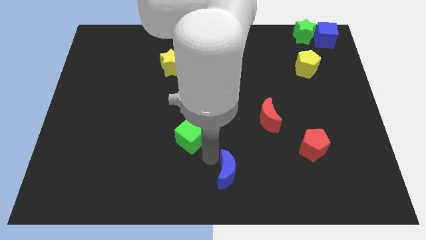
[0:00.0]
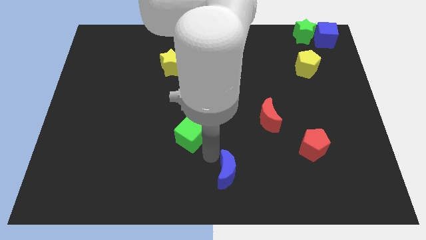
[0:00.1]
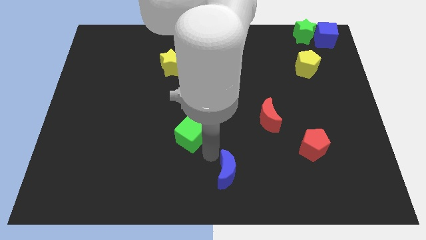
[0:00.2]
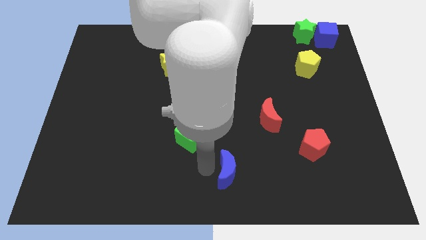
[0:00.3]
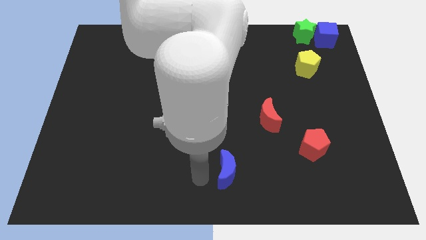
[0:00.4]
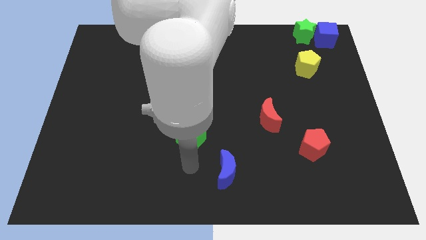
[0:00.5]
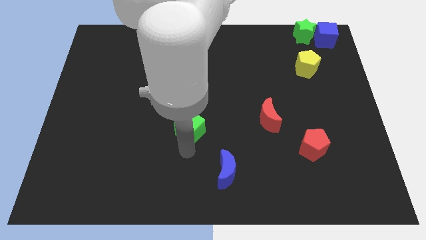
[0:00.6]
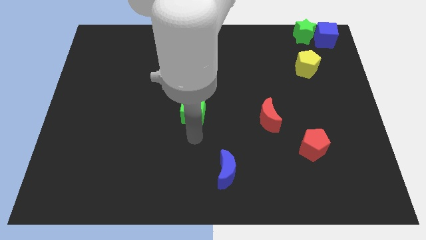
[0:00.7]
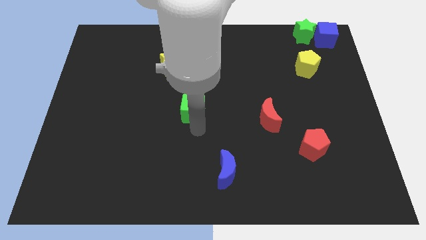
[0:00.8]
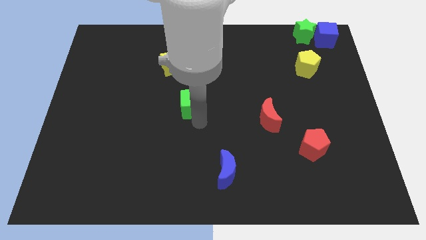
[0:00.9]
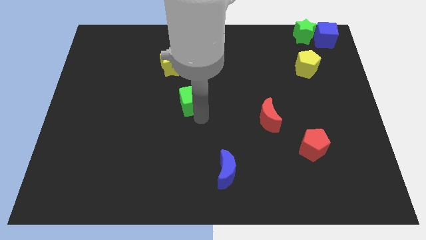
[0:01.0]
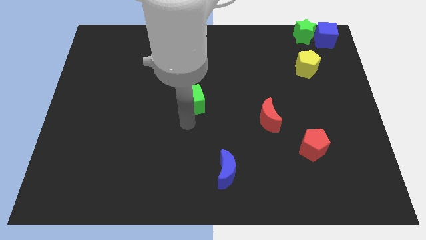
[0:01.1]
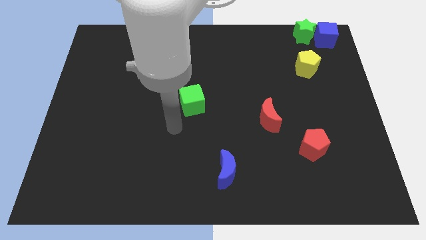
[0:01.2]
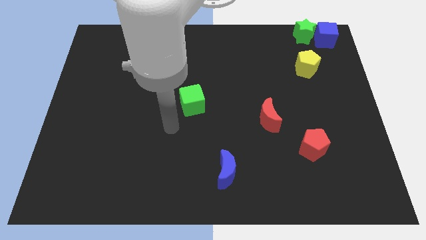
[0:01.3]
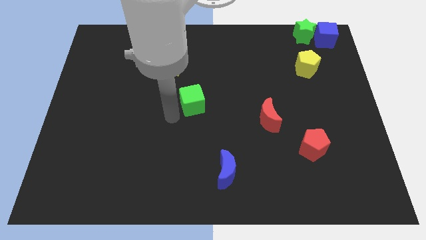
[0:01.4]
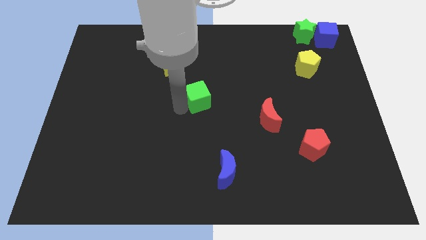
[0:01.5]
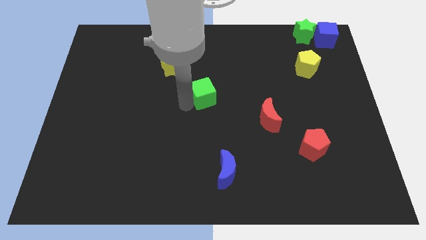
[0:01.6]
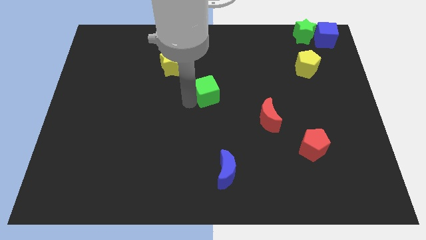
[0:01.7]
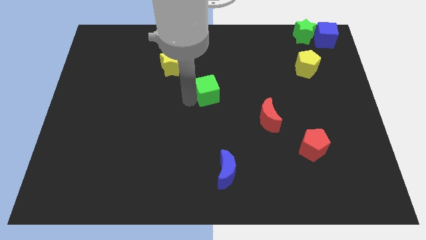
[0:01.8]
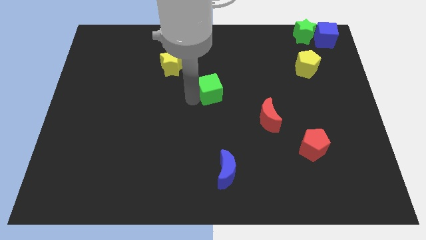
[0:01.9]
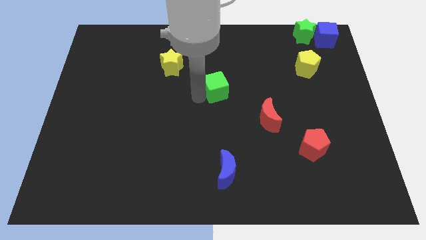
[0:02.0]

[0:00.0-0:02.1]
put the green cube between the yellow star and red moon

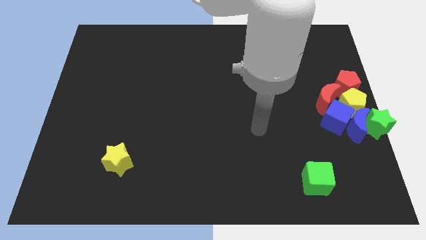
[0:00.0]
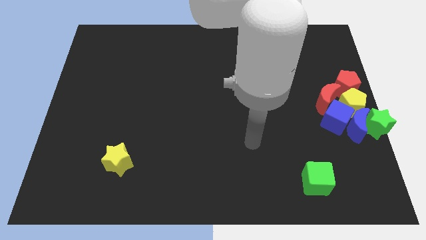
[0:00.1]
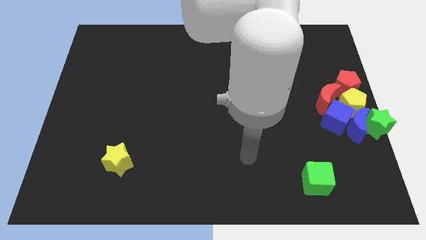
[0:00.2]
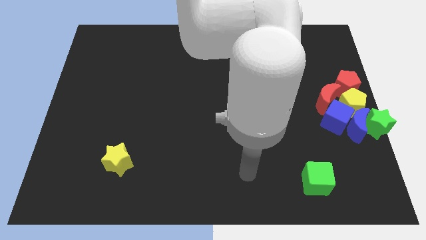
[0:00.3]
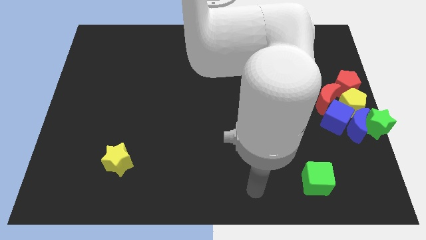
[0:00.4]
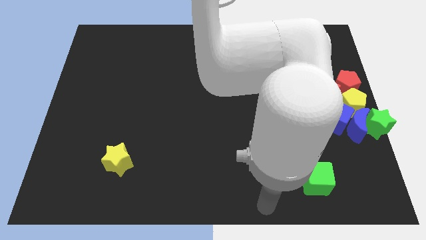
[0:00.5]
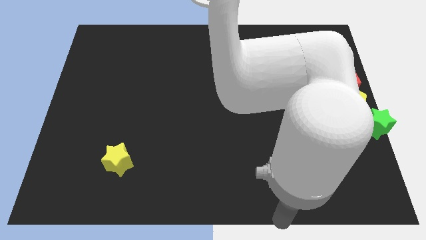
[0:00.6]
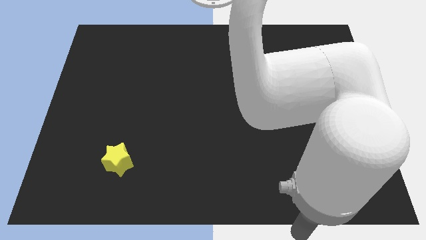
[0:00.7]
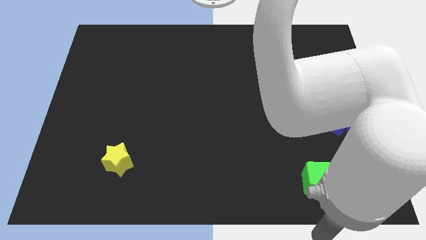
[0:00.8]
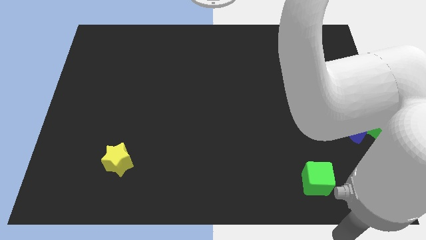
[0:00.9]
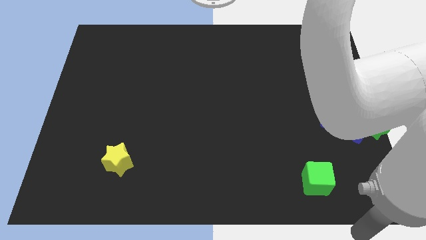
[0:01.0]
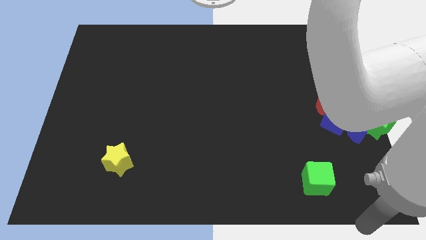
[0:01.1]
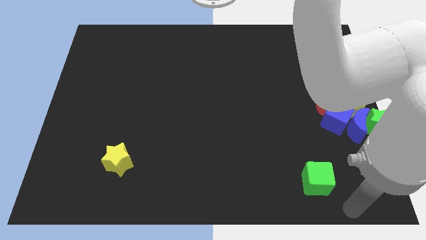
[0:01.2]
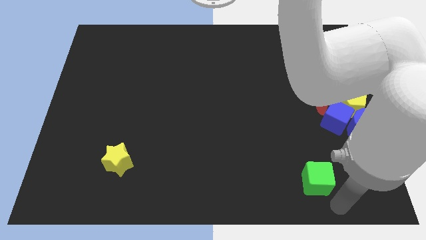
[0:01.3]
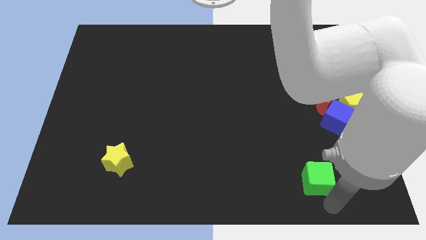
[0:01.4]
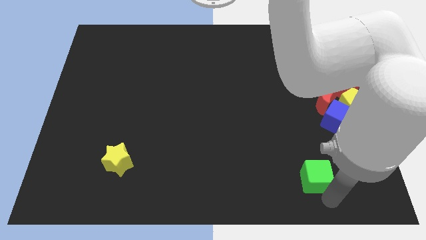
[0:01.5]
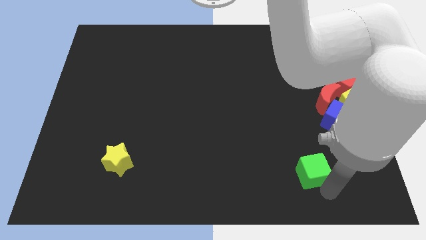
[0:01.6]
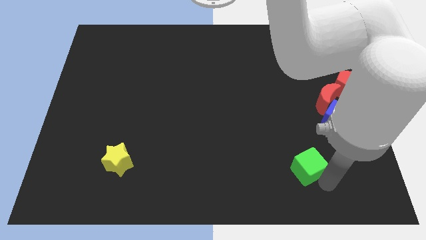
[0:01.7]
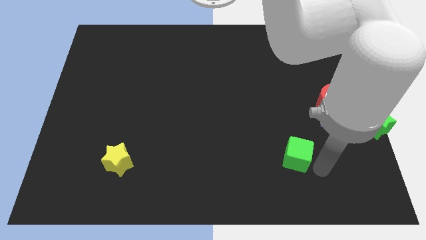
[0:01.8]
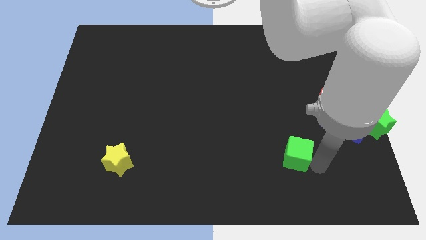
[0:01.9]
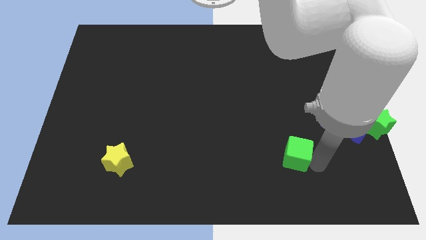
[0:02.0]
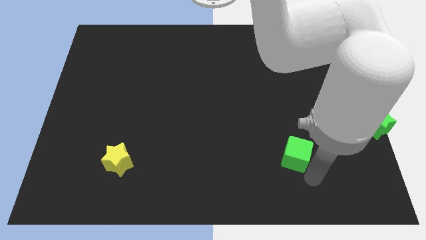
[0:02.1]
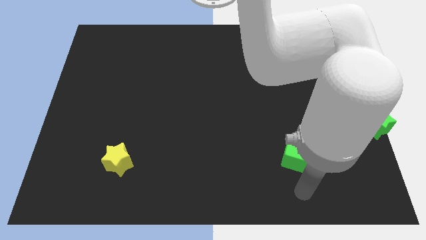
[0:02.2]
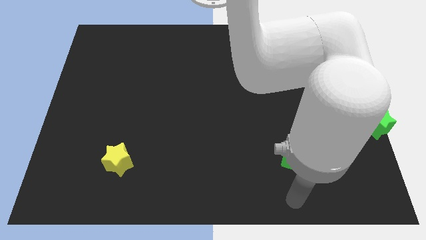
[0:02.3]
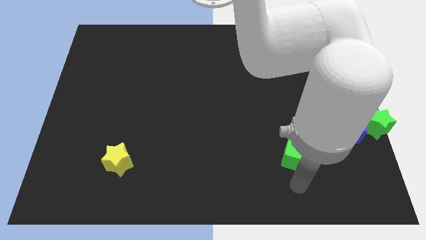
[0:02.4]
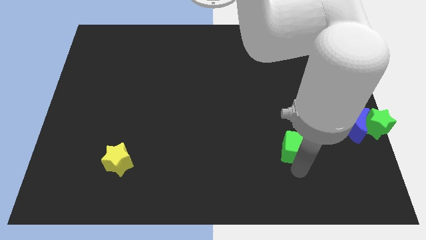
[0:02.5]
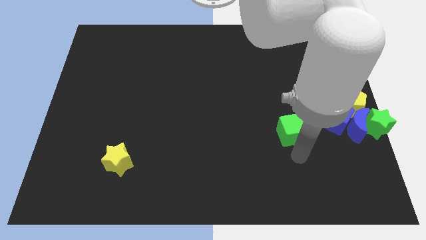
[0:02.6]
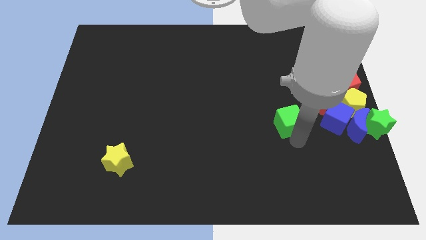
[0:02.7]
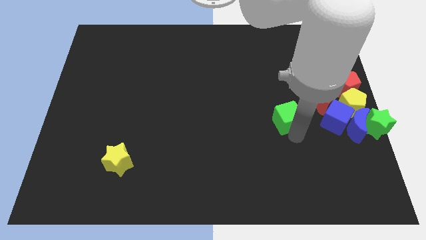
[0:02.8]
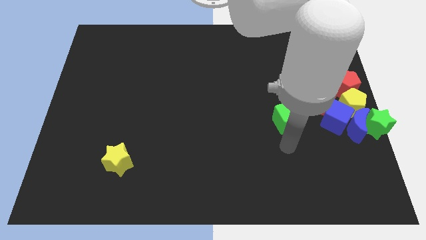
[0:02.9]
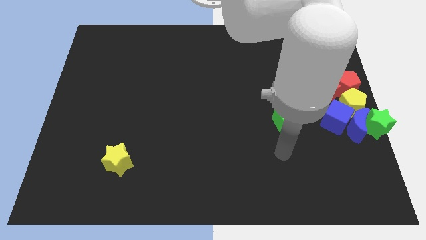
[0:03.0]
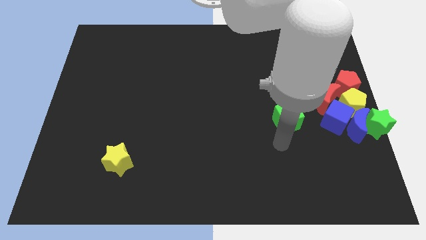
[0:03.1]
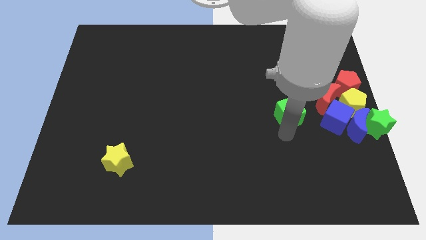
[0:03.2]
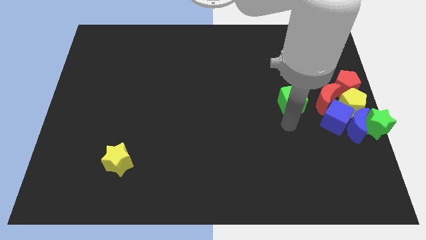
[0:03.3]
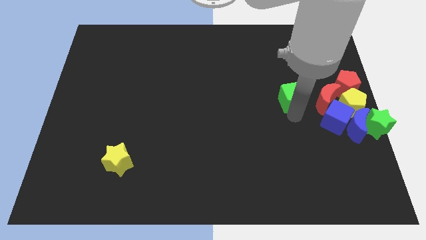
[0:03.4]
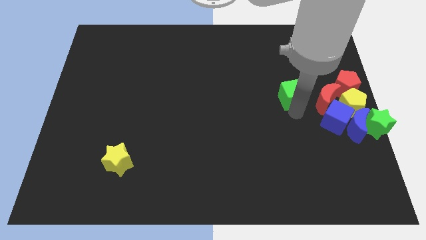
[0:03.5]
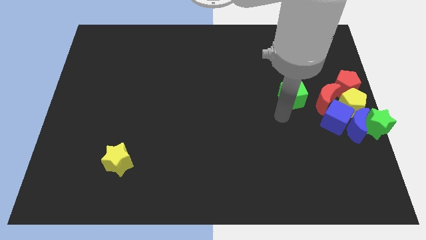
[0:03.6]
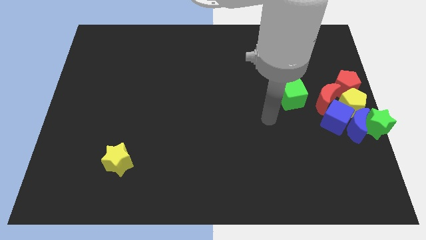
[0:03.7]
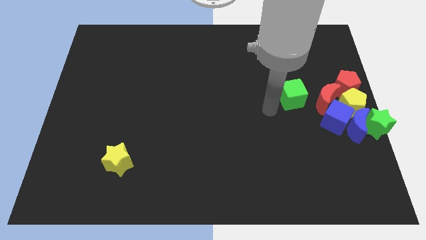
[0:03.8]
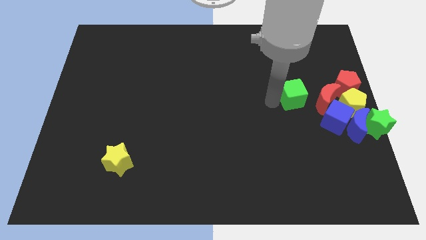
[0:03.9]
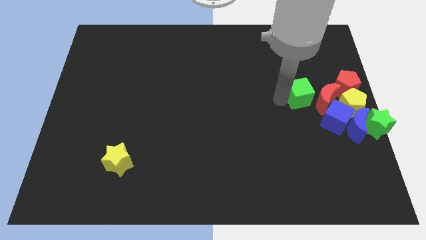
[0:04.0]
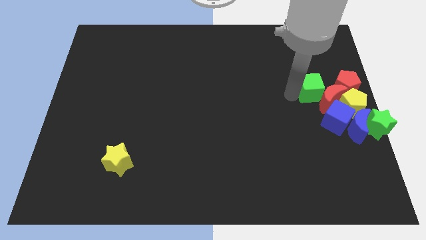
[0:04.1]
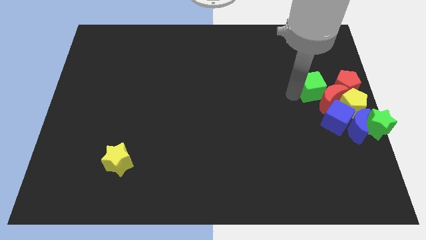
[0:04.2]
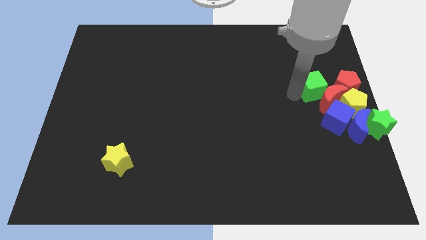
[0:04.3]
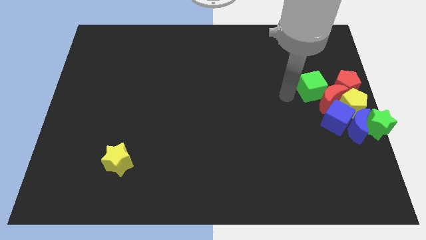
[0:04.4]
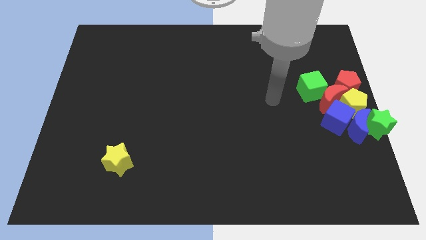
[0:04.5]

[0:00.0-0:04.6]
place green cube beside red crescent

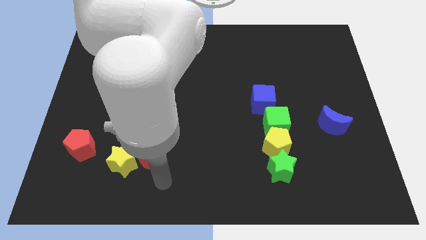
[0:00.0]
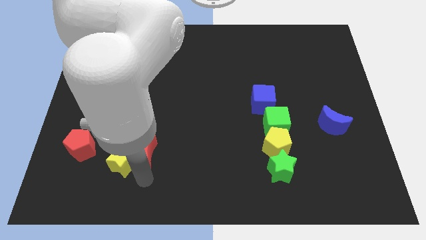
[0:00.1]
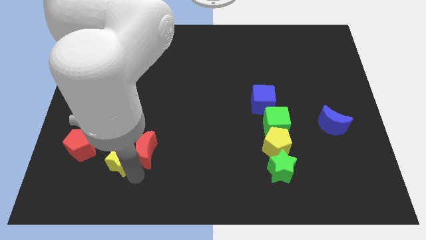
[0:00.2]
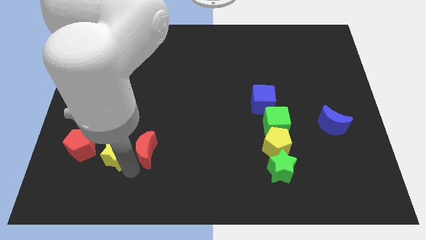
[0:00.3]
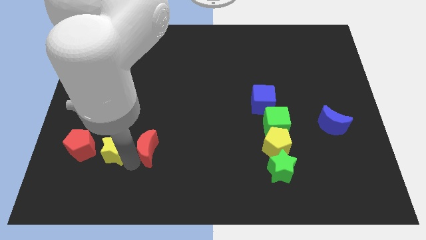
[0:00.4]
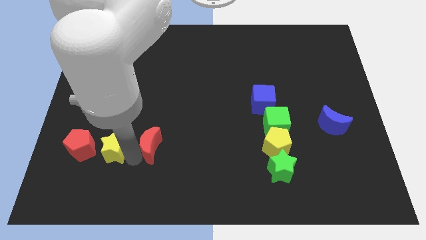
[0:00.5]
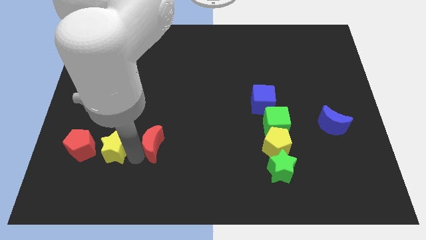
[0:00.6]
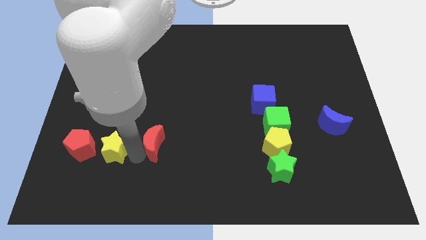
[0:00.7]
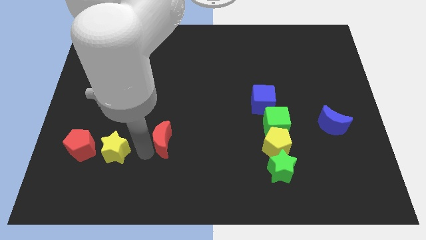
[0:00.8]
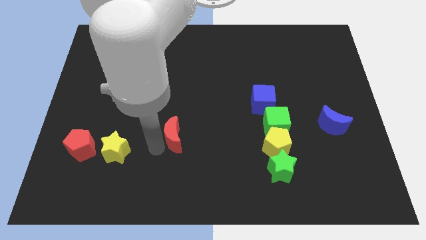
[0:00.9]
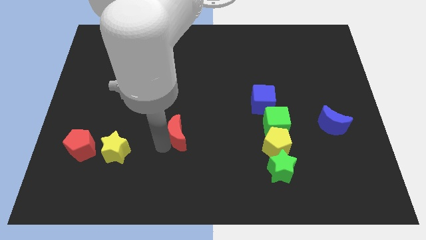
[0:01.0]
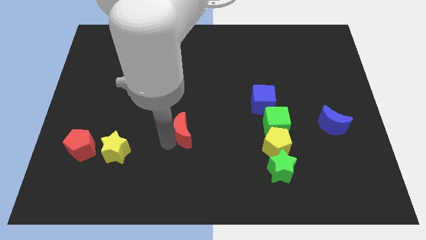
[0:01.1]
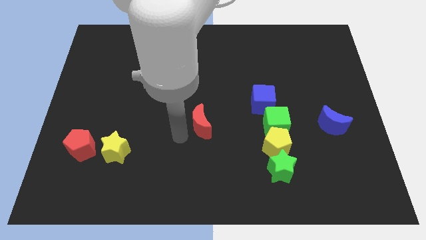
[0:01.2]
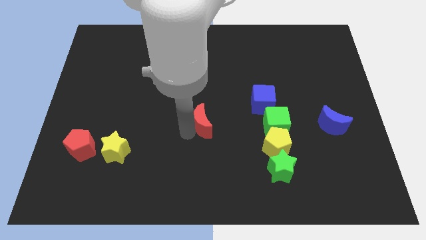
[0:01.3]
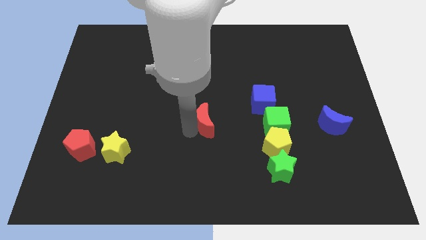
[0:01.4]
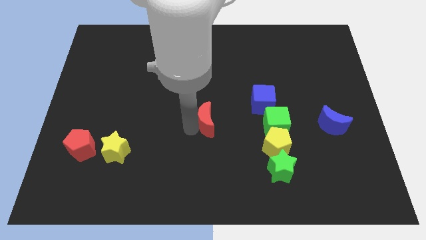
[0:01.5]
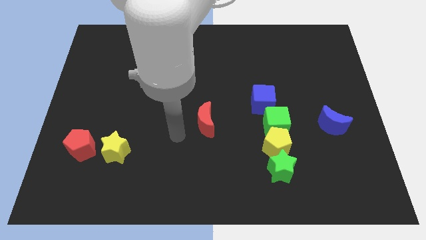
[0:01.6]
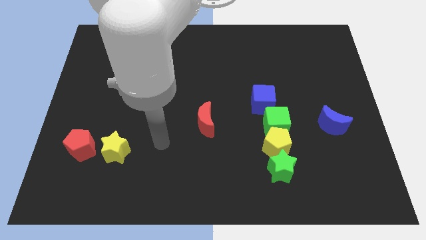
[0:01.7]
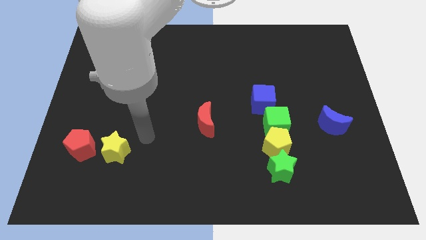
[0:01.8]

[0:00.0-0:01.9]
place red moon to the center of the board

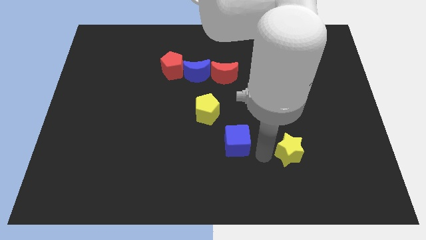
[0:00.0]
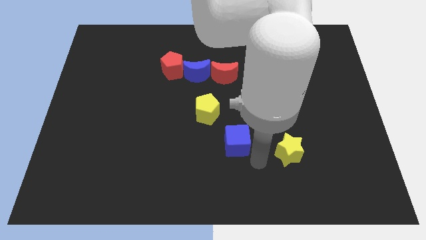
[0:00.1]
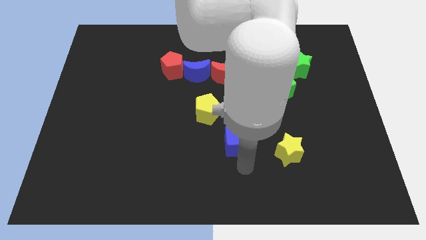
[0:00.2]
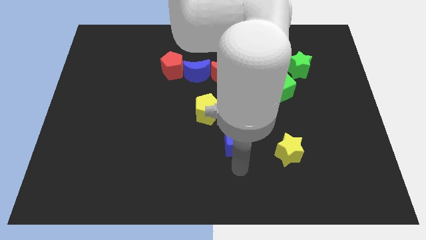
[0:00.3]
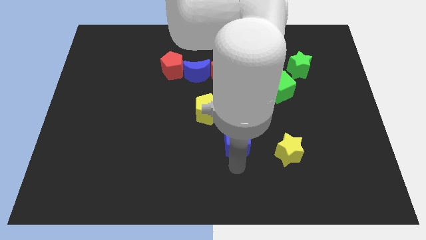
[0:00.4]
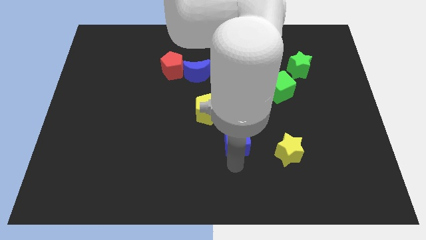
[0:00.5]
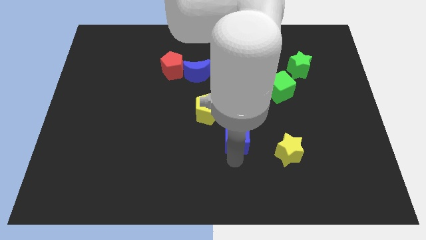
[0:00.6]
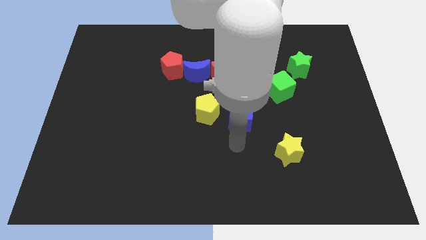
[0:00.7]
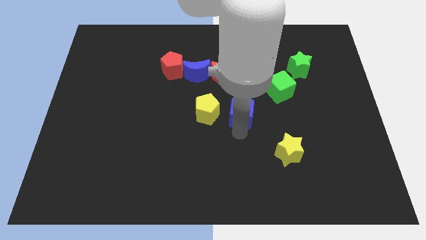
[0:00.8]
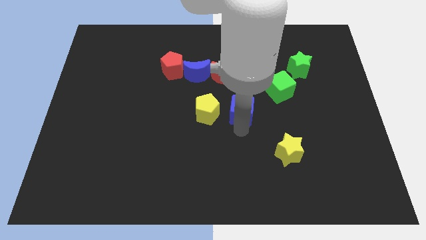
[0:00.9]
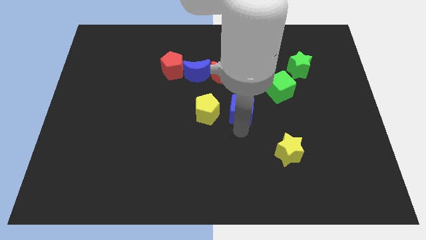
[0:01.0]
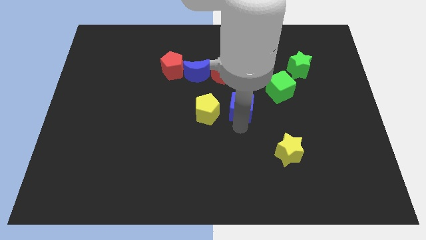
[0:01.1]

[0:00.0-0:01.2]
place the blue cube to the right side of yellow pentagon
